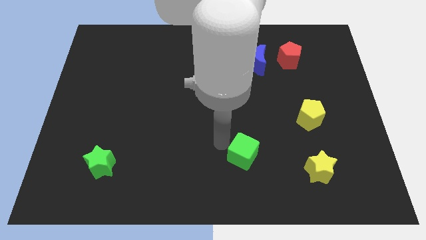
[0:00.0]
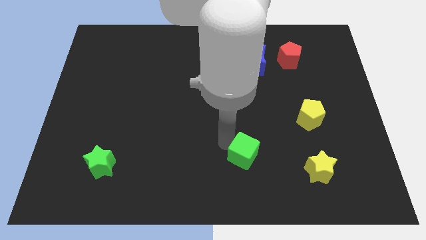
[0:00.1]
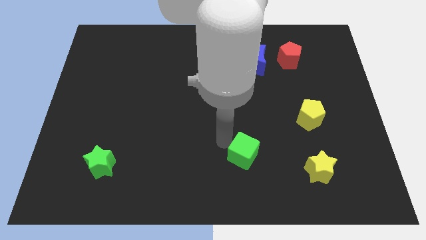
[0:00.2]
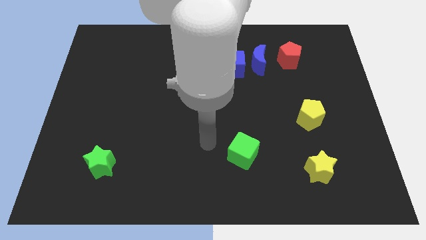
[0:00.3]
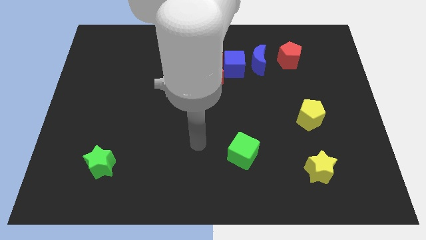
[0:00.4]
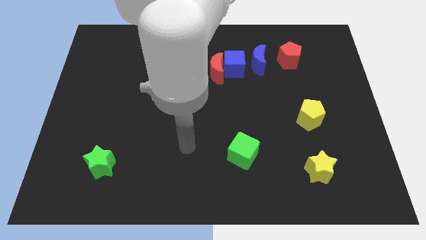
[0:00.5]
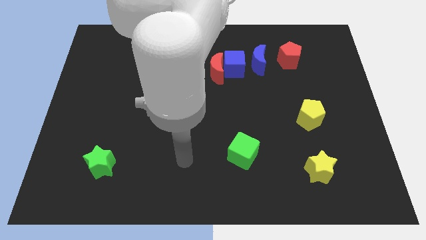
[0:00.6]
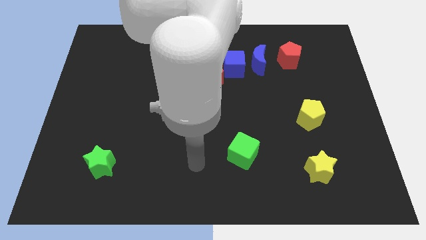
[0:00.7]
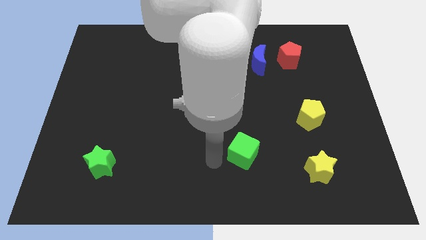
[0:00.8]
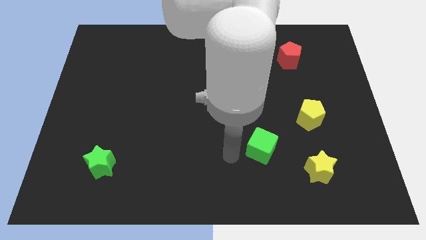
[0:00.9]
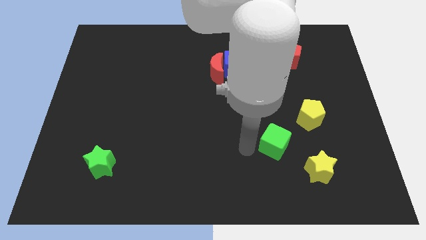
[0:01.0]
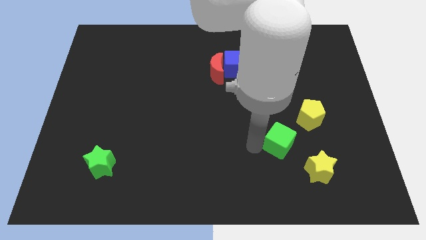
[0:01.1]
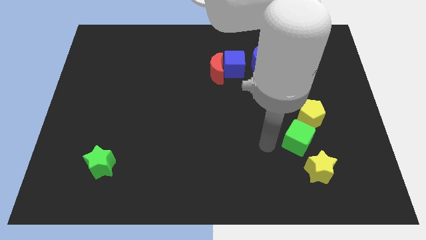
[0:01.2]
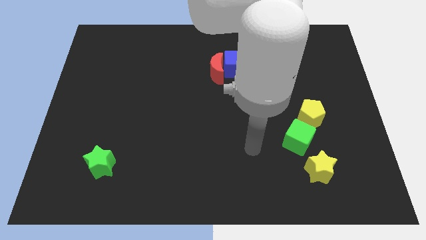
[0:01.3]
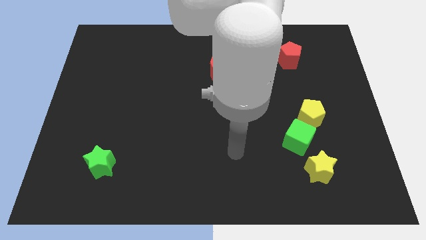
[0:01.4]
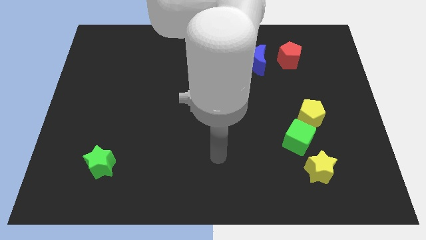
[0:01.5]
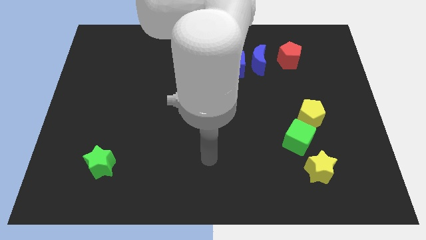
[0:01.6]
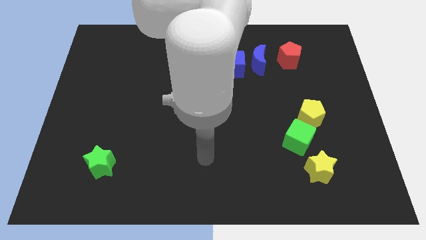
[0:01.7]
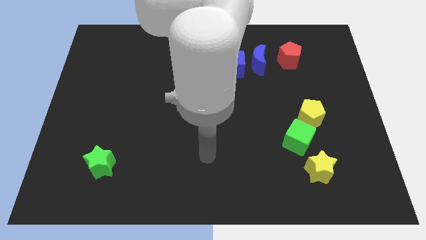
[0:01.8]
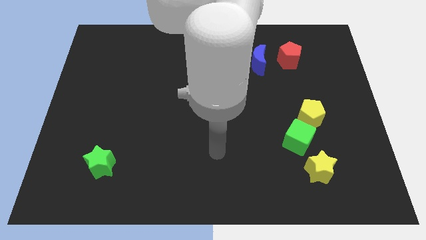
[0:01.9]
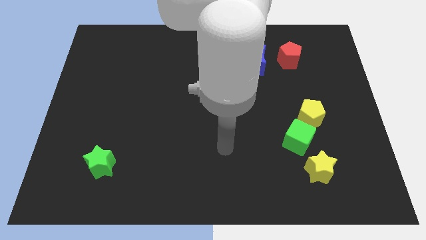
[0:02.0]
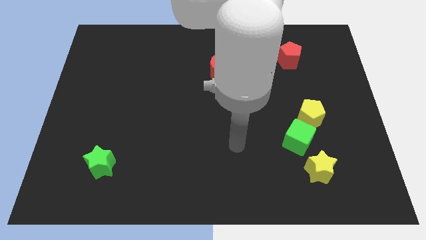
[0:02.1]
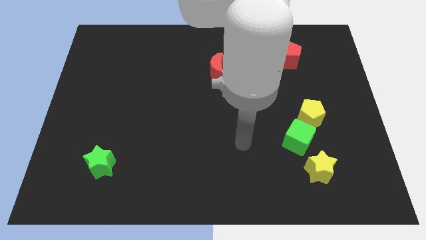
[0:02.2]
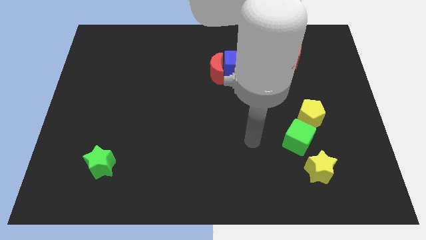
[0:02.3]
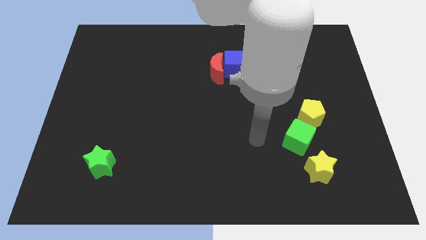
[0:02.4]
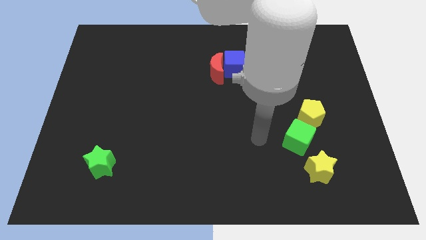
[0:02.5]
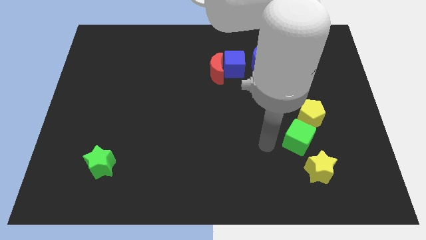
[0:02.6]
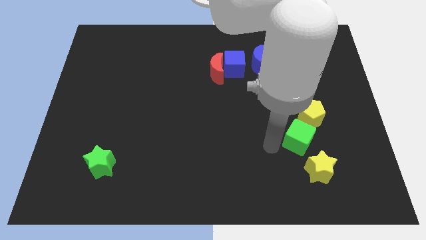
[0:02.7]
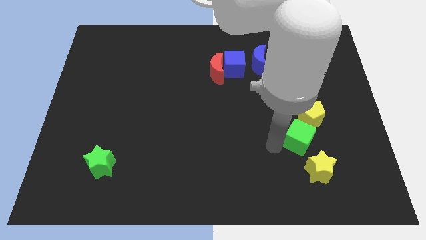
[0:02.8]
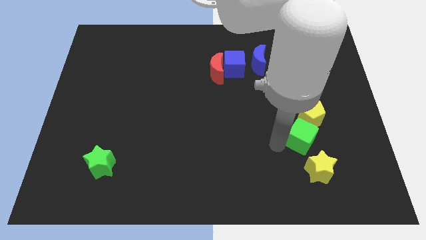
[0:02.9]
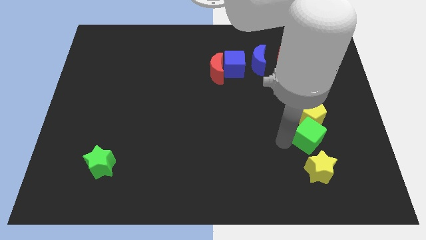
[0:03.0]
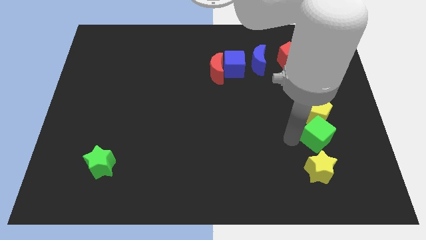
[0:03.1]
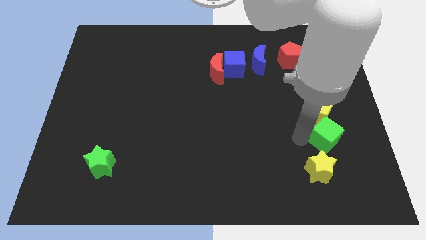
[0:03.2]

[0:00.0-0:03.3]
place the green cube in between the yellow star and yellow pentagon

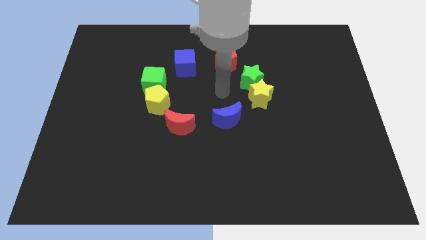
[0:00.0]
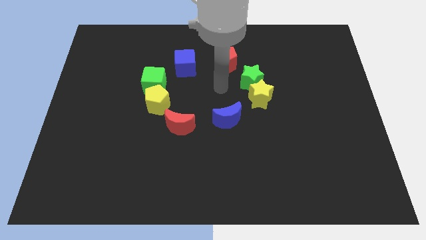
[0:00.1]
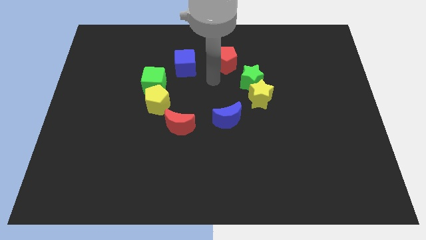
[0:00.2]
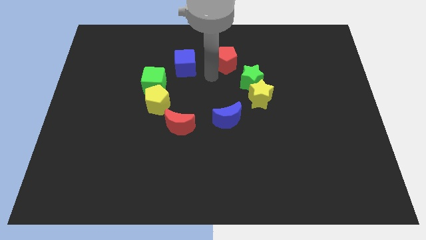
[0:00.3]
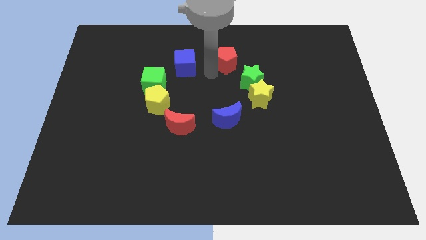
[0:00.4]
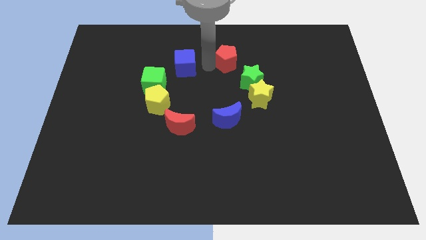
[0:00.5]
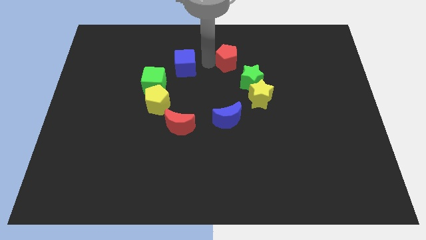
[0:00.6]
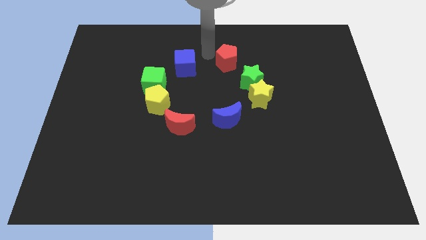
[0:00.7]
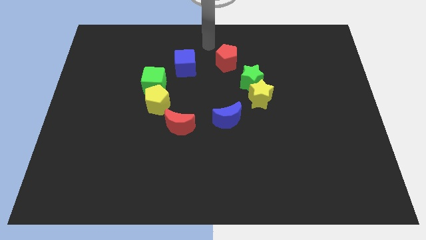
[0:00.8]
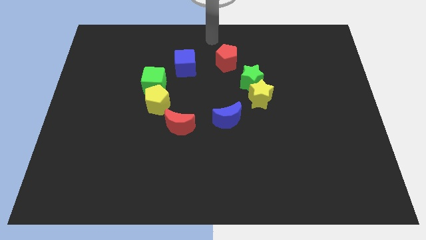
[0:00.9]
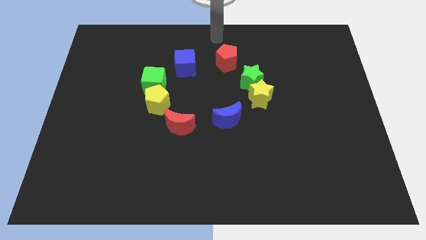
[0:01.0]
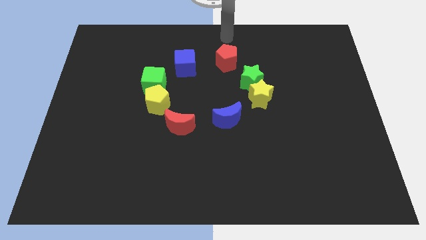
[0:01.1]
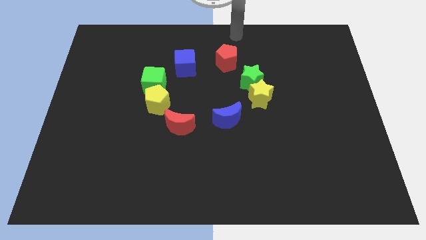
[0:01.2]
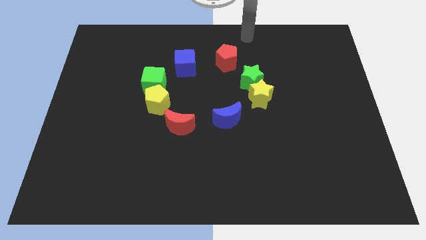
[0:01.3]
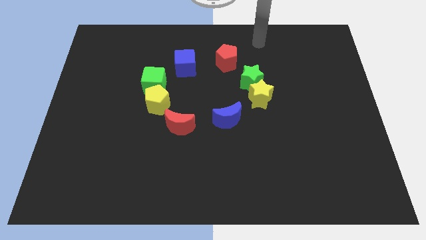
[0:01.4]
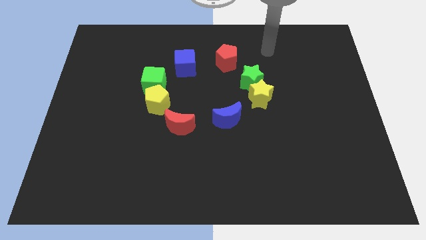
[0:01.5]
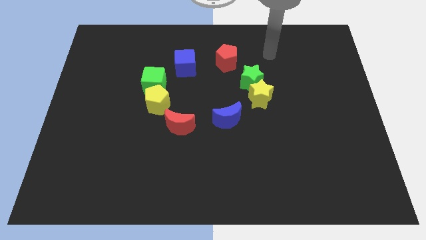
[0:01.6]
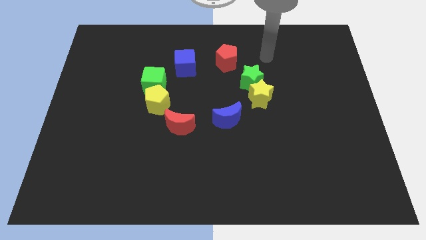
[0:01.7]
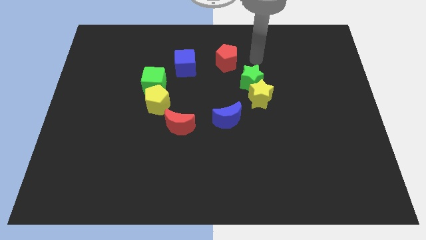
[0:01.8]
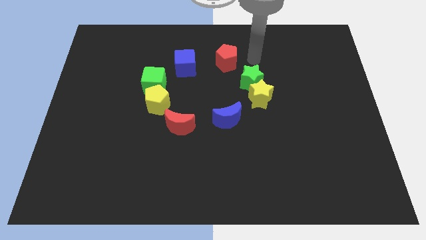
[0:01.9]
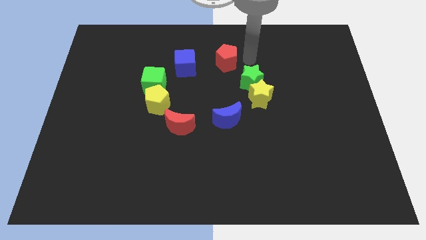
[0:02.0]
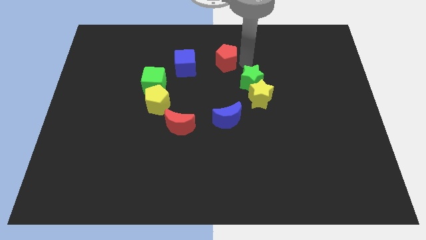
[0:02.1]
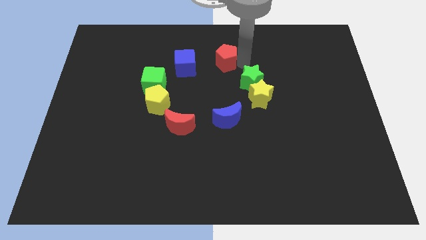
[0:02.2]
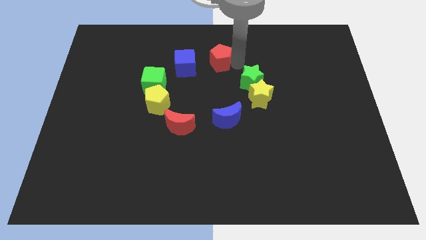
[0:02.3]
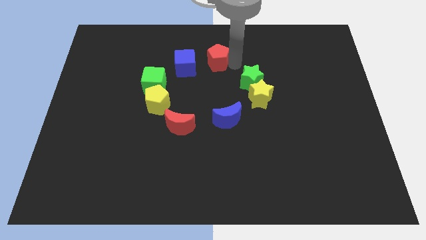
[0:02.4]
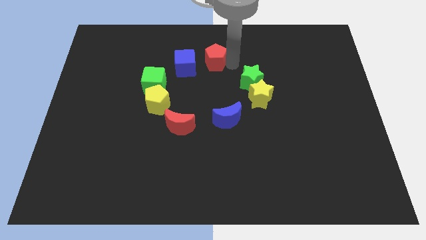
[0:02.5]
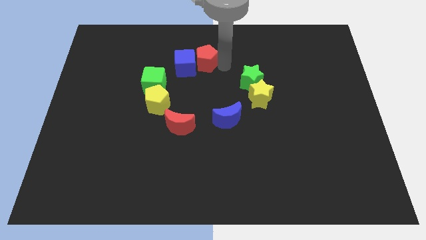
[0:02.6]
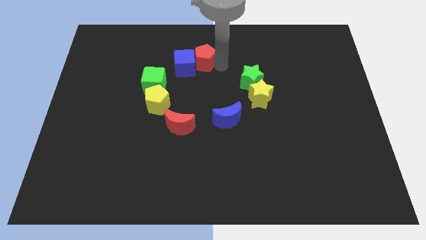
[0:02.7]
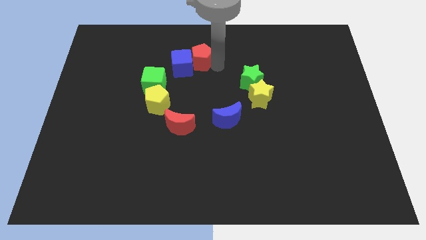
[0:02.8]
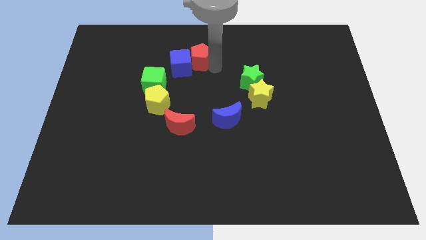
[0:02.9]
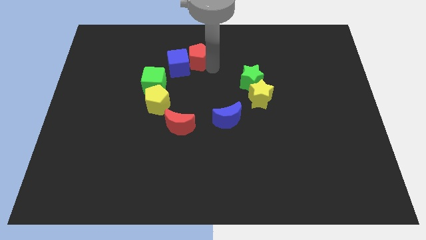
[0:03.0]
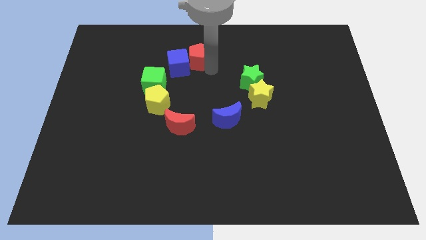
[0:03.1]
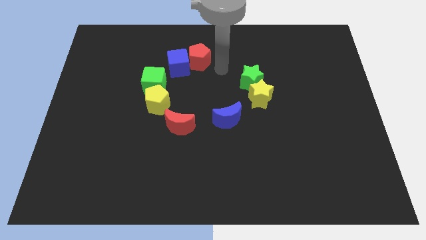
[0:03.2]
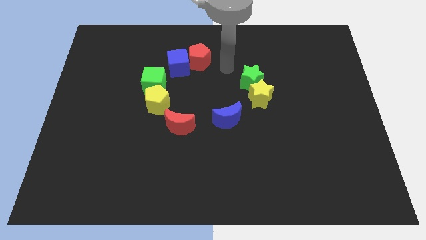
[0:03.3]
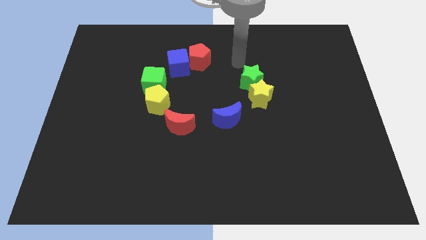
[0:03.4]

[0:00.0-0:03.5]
slide the red pentagon into the blue cube

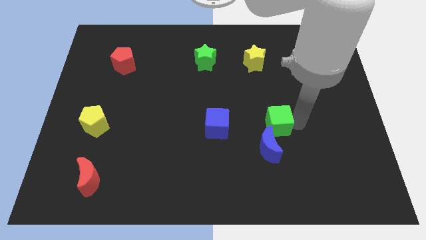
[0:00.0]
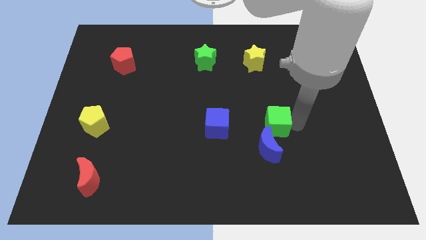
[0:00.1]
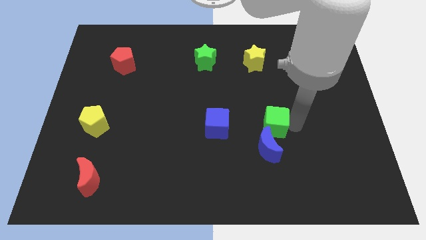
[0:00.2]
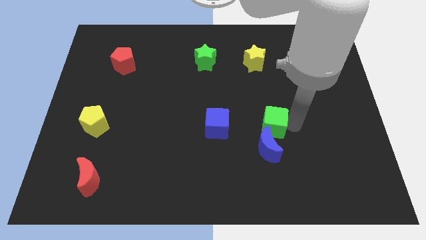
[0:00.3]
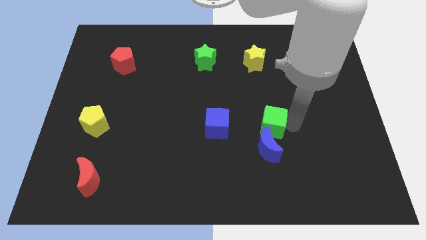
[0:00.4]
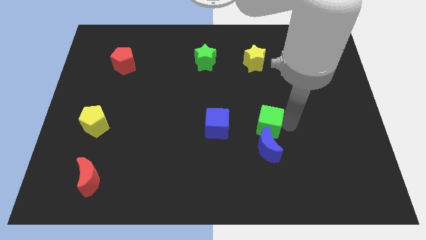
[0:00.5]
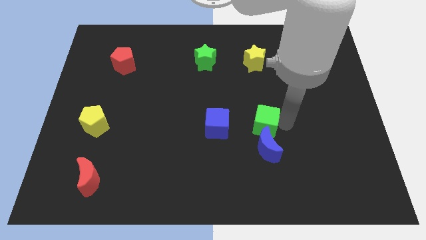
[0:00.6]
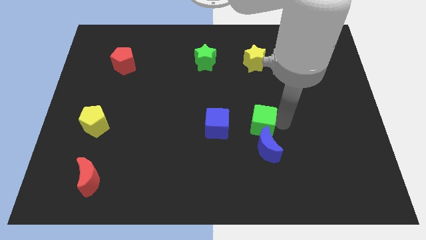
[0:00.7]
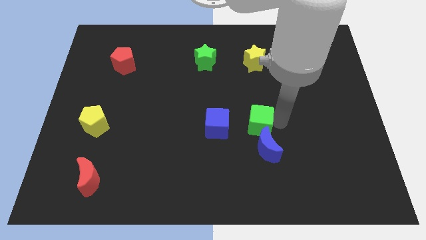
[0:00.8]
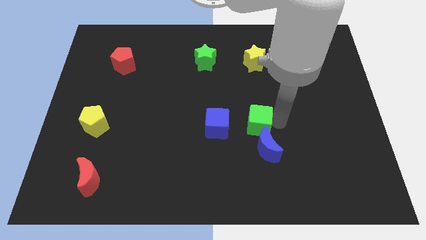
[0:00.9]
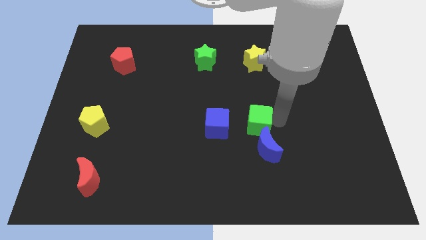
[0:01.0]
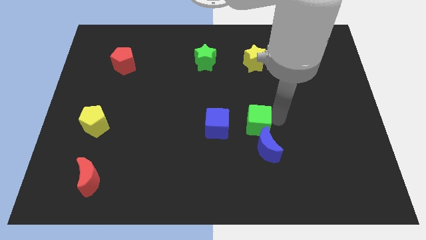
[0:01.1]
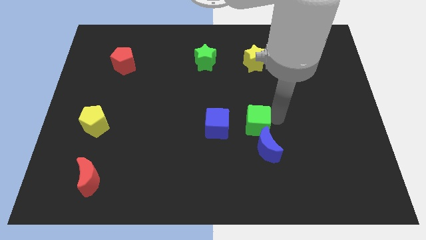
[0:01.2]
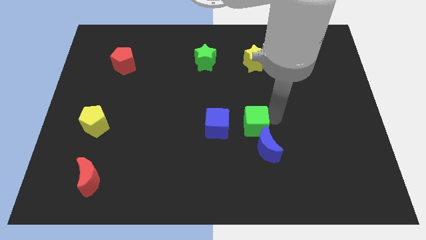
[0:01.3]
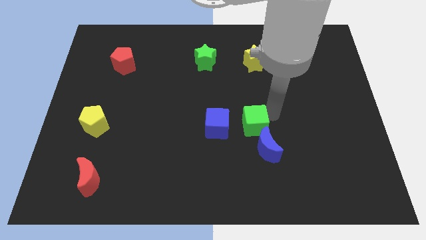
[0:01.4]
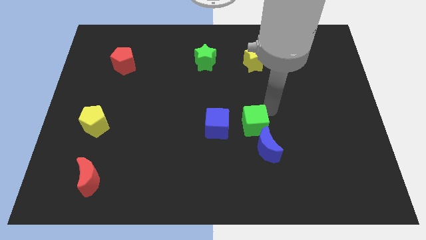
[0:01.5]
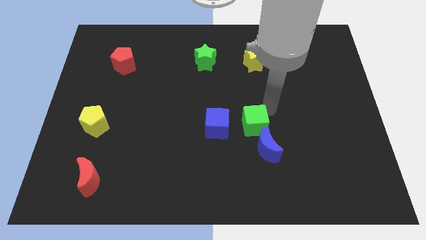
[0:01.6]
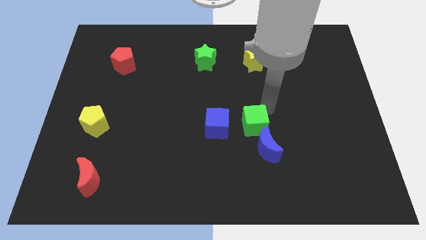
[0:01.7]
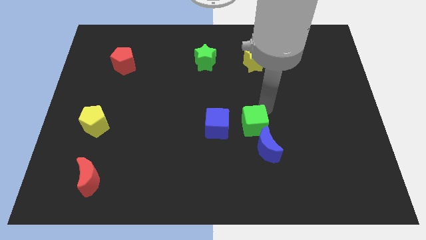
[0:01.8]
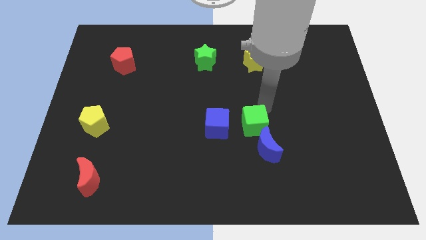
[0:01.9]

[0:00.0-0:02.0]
move the green cube to the right of the blue cube

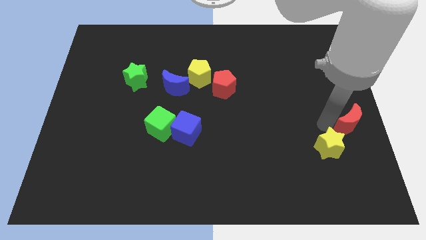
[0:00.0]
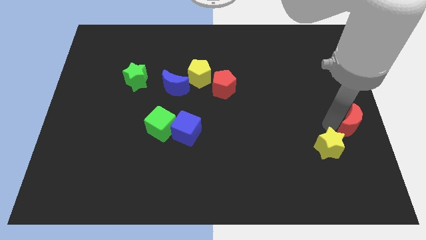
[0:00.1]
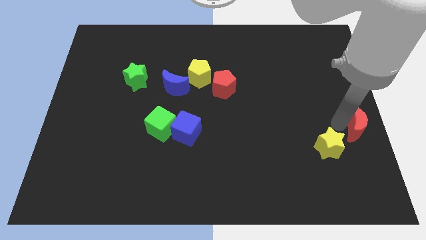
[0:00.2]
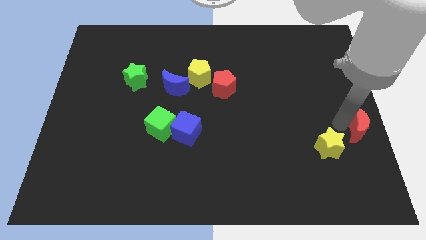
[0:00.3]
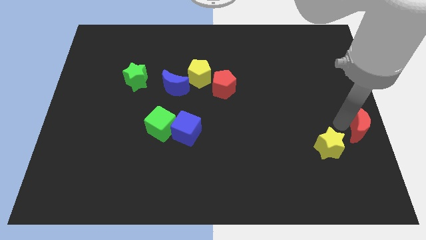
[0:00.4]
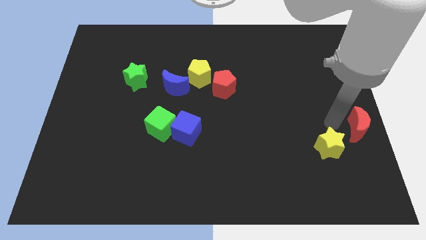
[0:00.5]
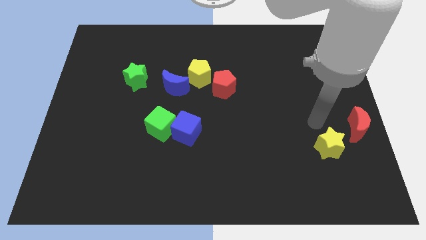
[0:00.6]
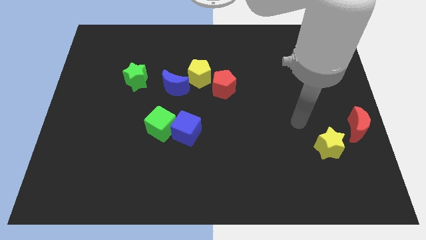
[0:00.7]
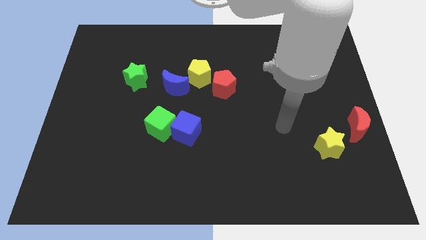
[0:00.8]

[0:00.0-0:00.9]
move the red crescent to the right of the board
